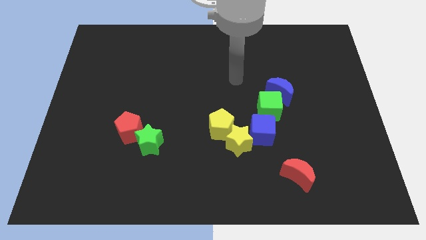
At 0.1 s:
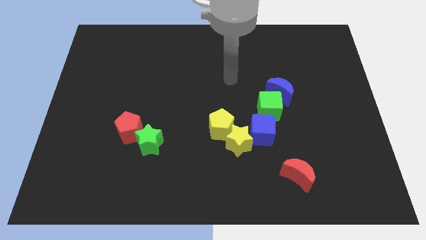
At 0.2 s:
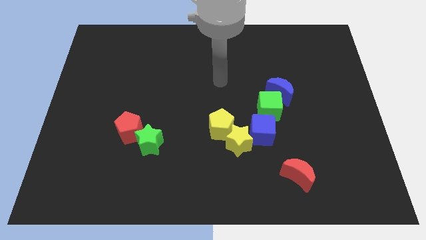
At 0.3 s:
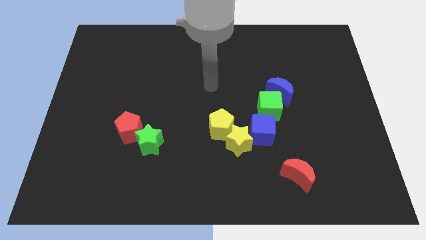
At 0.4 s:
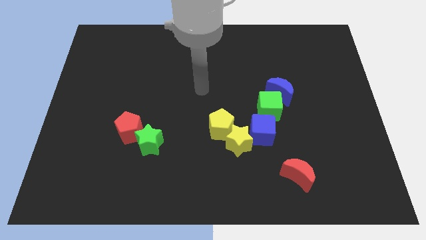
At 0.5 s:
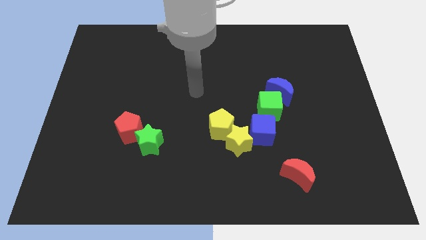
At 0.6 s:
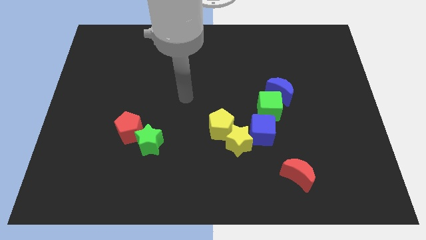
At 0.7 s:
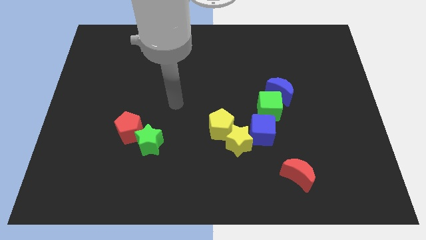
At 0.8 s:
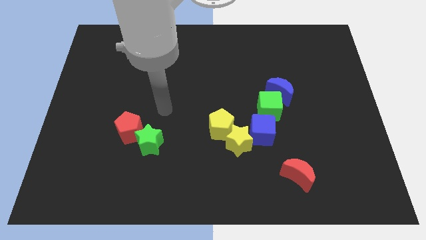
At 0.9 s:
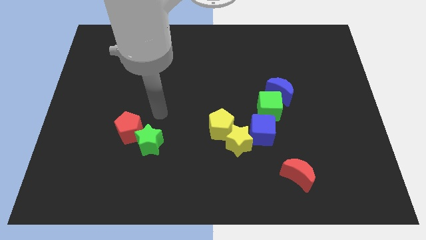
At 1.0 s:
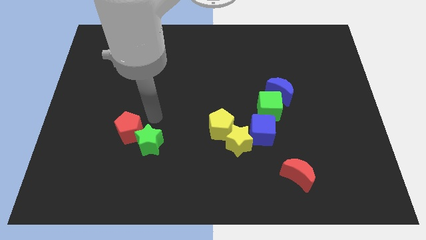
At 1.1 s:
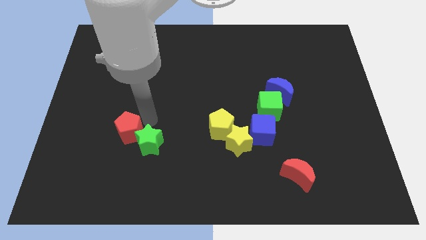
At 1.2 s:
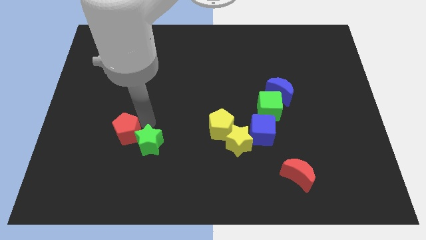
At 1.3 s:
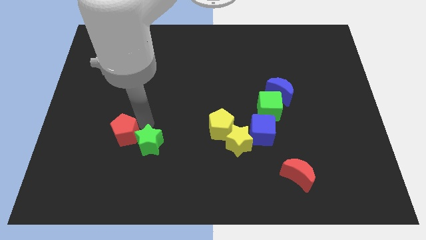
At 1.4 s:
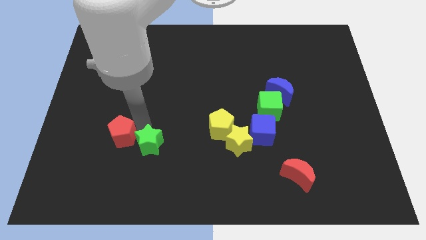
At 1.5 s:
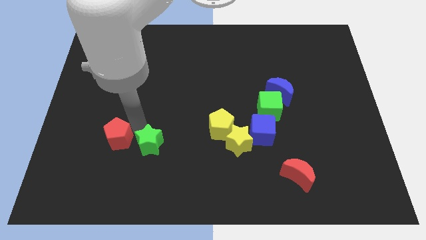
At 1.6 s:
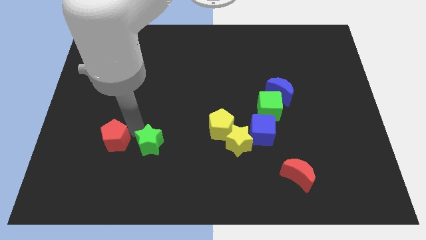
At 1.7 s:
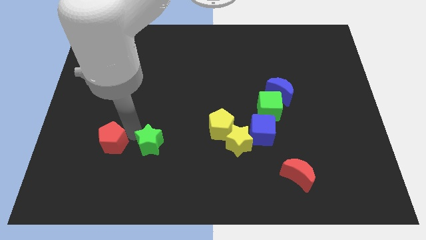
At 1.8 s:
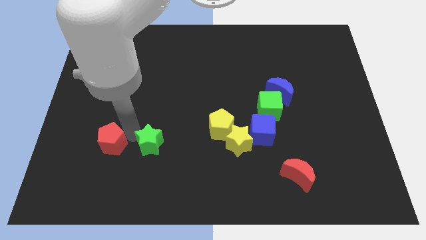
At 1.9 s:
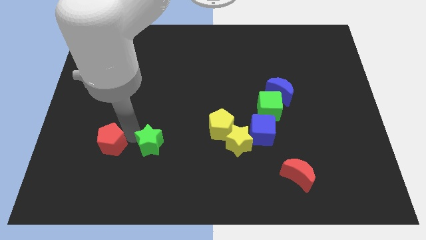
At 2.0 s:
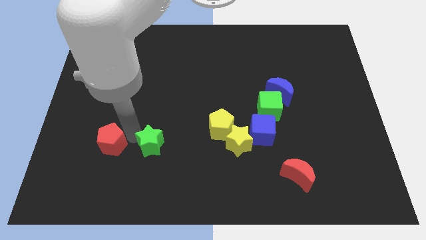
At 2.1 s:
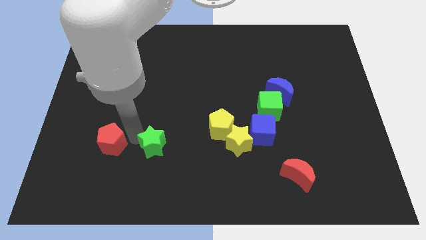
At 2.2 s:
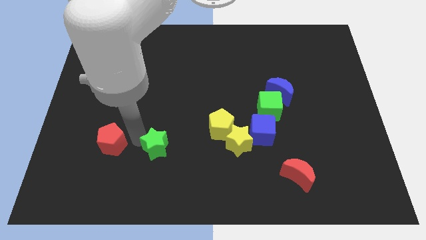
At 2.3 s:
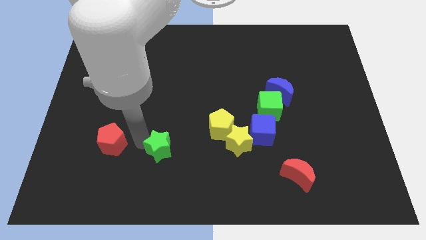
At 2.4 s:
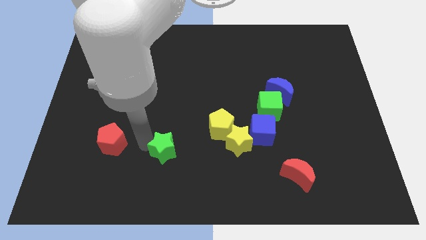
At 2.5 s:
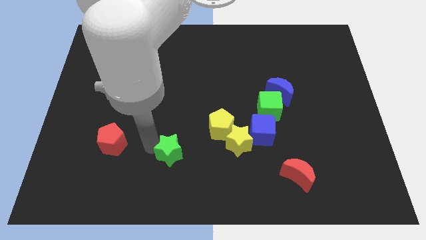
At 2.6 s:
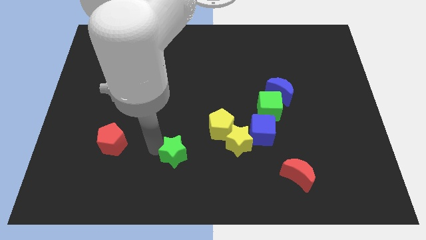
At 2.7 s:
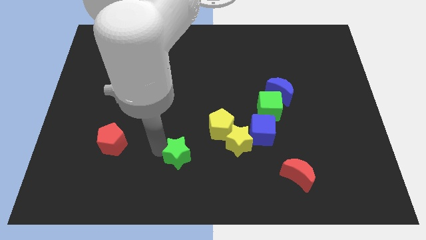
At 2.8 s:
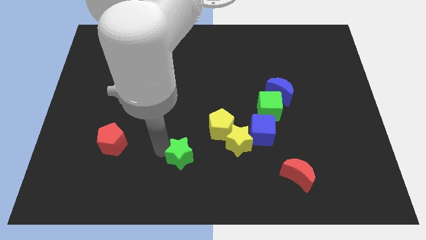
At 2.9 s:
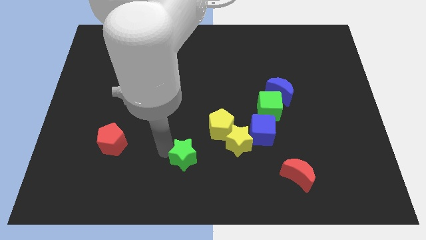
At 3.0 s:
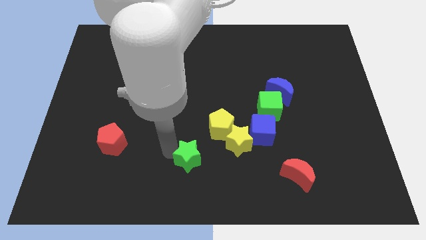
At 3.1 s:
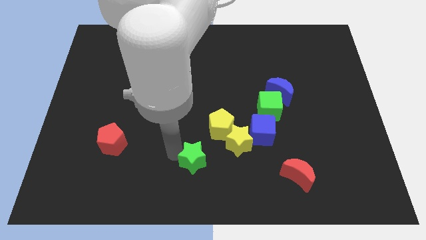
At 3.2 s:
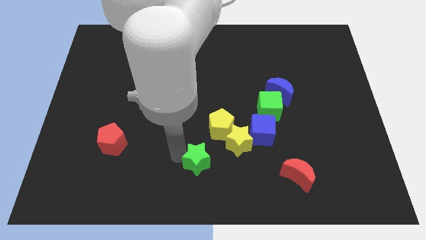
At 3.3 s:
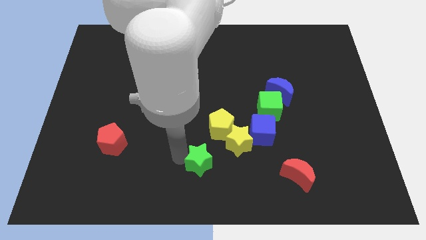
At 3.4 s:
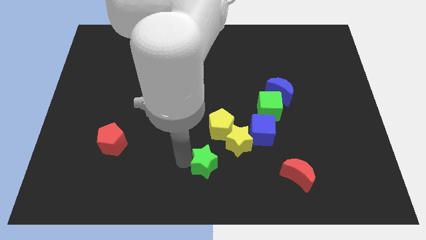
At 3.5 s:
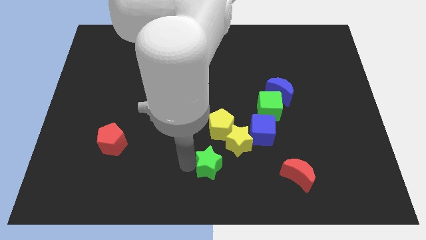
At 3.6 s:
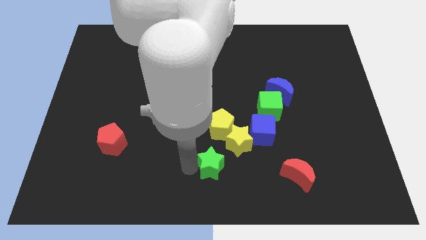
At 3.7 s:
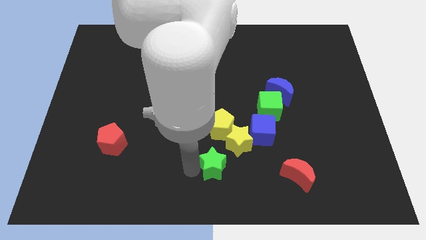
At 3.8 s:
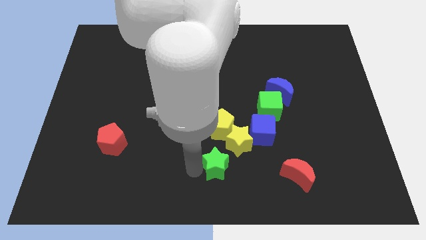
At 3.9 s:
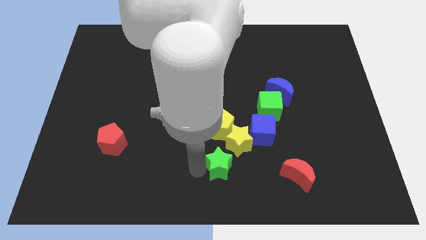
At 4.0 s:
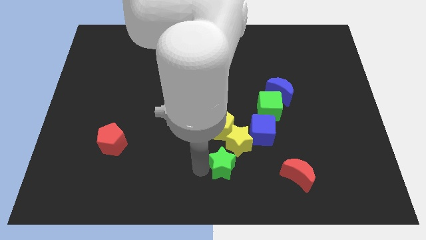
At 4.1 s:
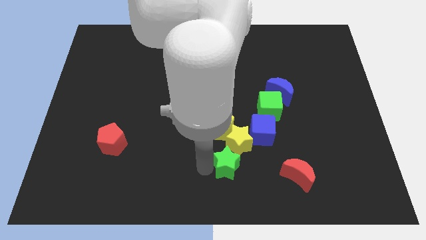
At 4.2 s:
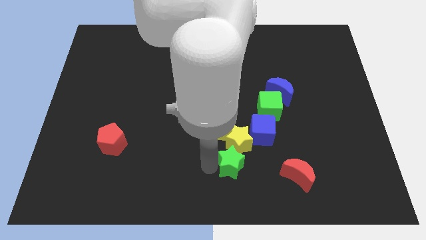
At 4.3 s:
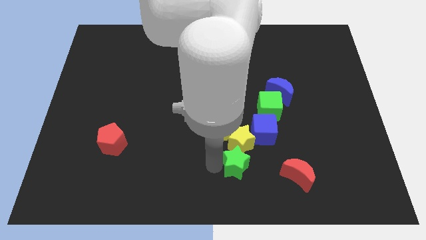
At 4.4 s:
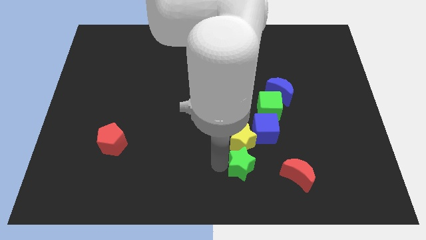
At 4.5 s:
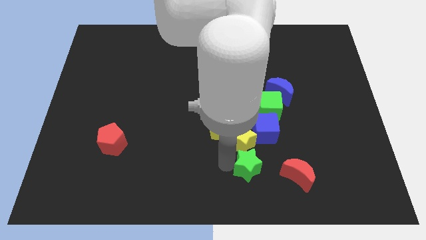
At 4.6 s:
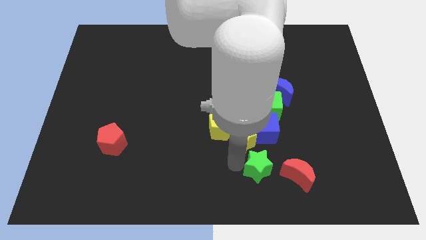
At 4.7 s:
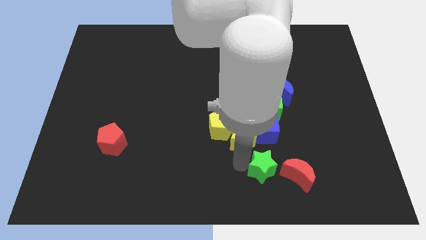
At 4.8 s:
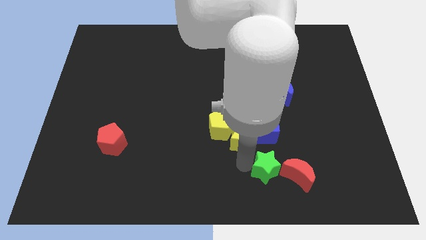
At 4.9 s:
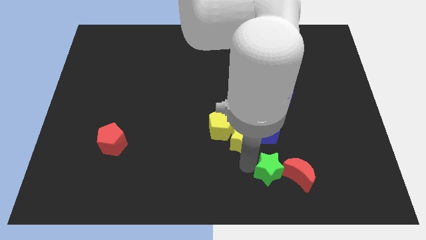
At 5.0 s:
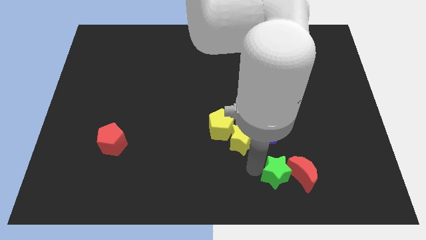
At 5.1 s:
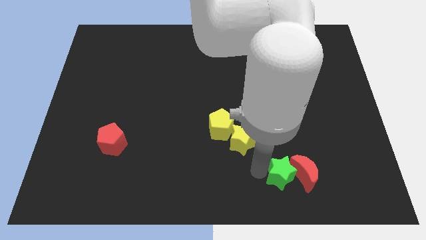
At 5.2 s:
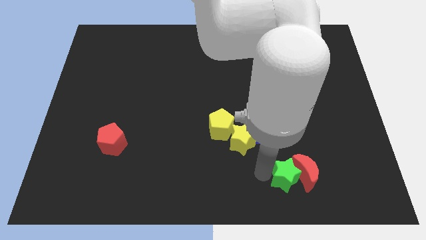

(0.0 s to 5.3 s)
slide the green star to the red moon

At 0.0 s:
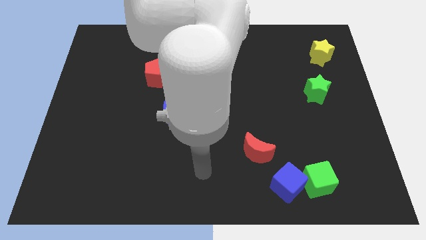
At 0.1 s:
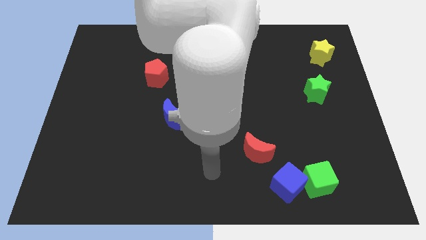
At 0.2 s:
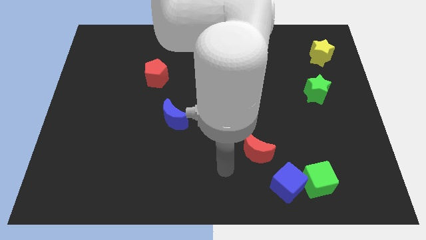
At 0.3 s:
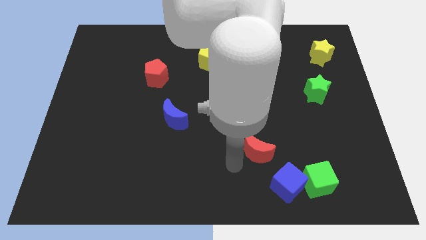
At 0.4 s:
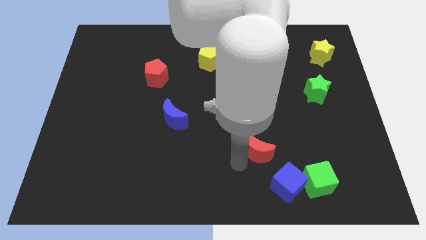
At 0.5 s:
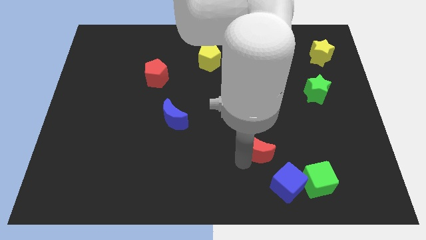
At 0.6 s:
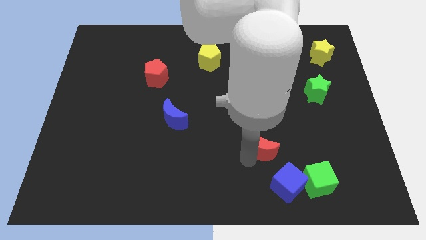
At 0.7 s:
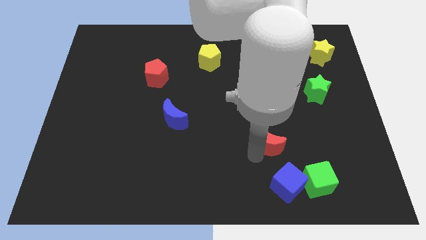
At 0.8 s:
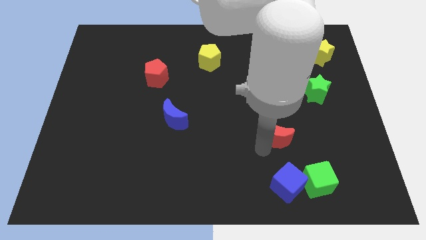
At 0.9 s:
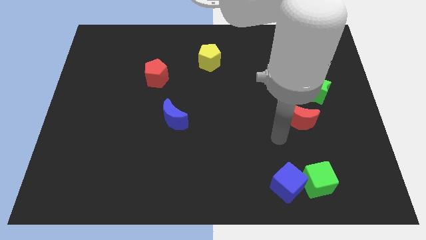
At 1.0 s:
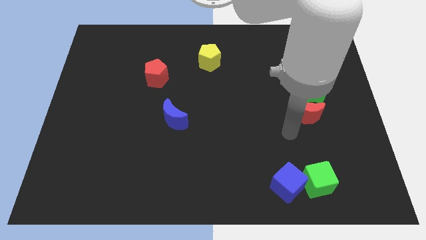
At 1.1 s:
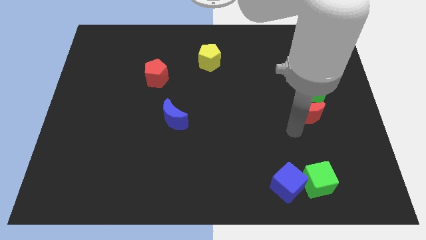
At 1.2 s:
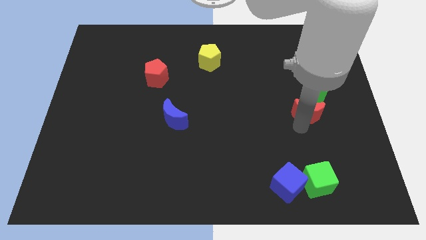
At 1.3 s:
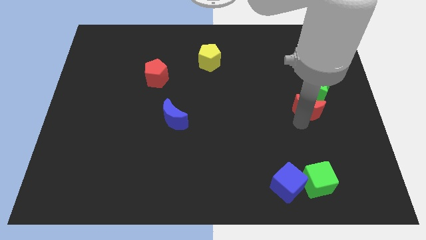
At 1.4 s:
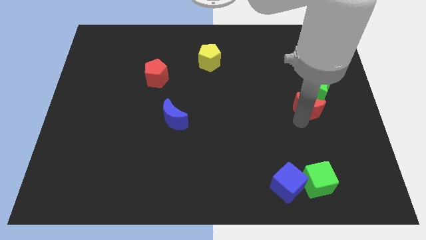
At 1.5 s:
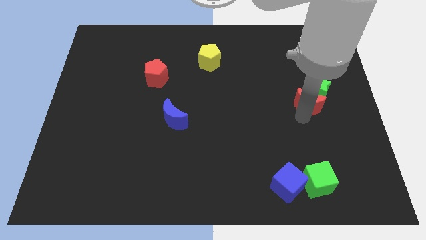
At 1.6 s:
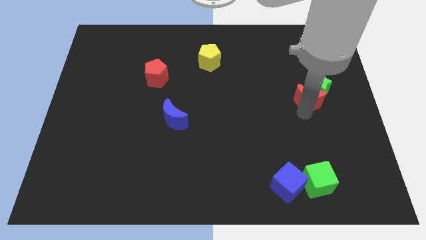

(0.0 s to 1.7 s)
push the red moon towards the green star

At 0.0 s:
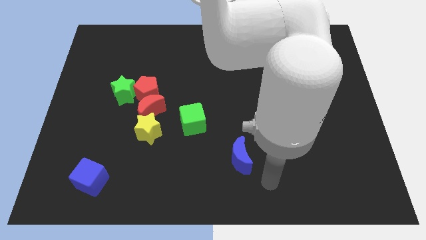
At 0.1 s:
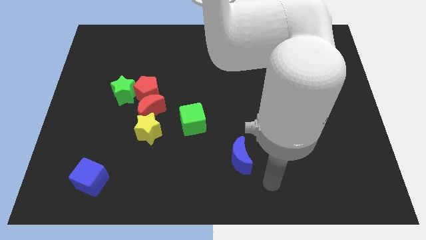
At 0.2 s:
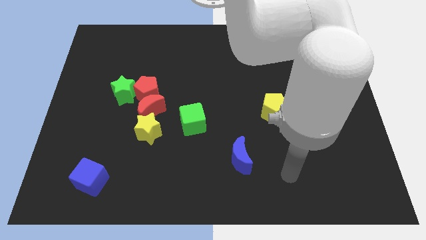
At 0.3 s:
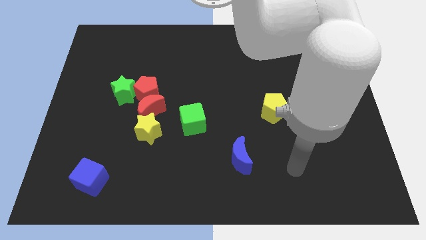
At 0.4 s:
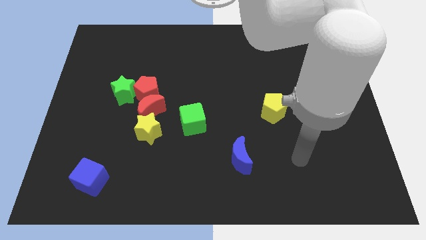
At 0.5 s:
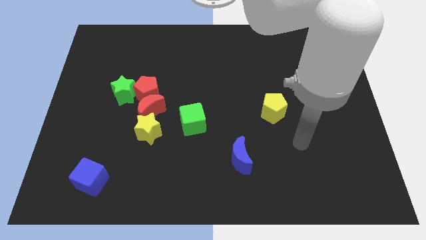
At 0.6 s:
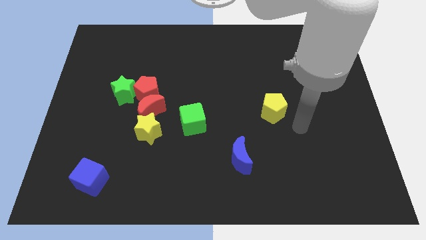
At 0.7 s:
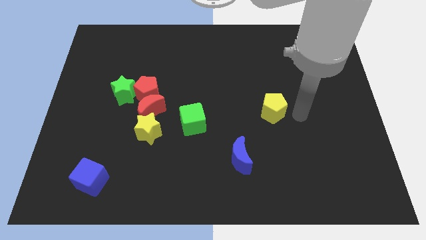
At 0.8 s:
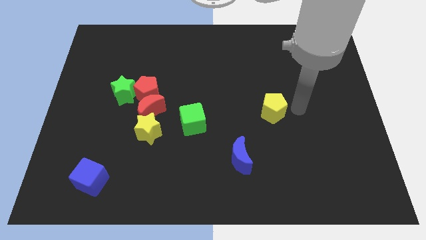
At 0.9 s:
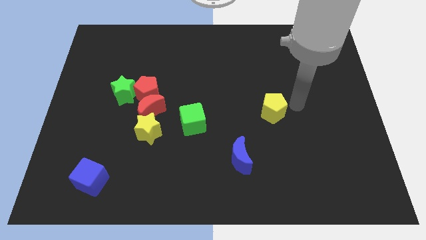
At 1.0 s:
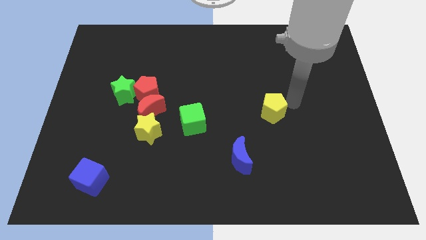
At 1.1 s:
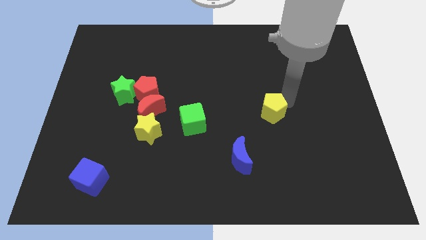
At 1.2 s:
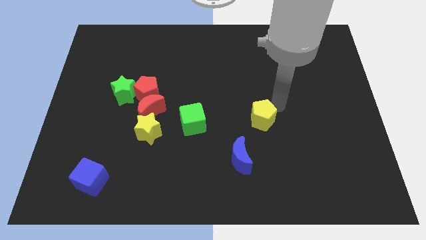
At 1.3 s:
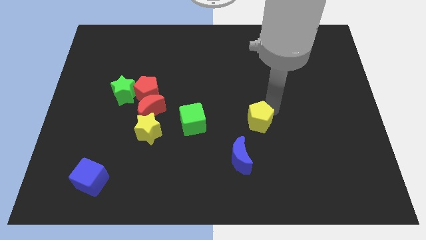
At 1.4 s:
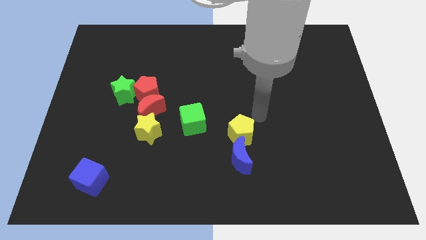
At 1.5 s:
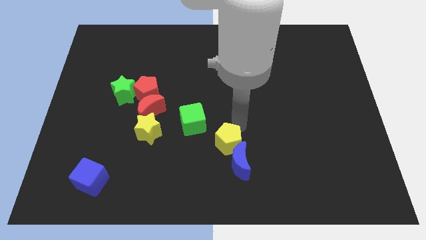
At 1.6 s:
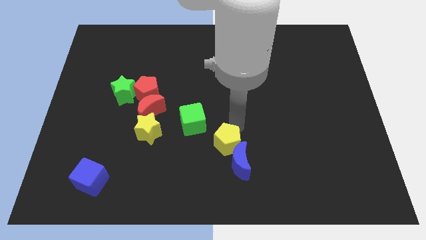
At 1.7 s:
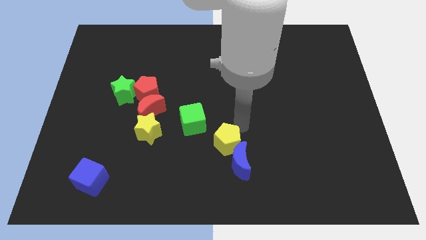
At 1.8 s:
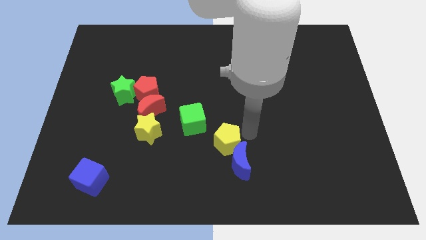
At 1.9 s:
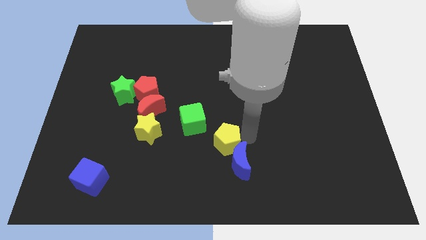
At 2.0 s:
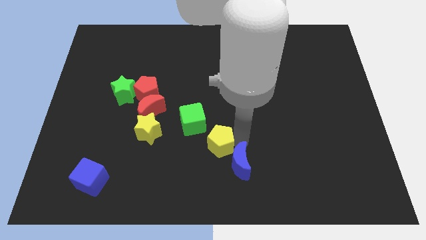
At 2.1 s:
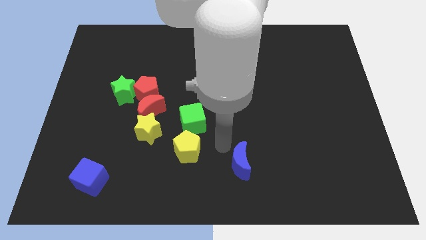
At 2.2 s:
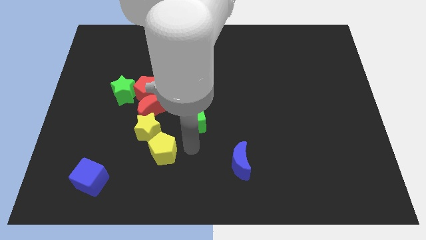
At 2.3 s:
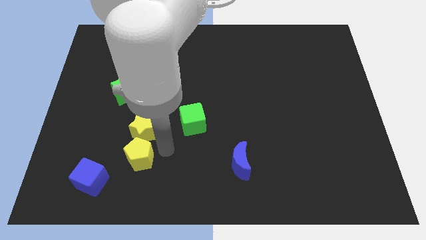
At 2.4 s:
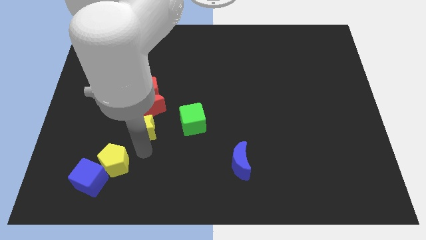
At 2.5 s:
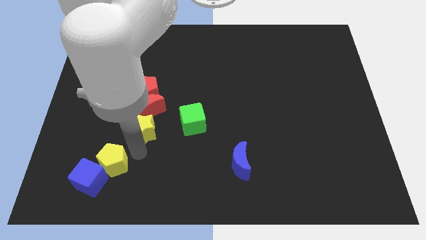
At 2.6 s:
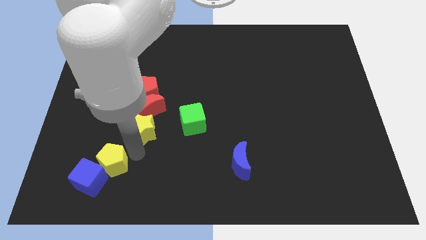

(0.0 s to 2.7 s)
push the yellow pentagon next to the blue cube
